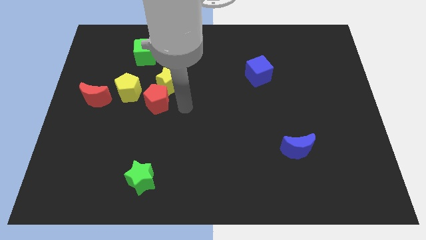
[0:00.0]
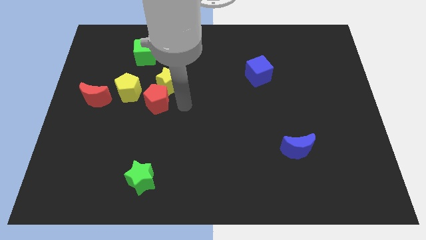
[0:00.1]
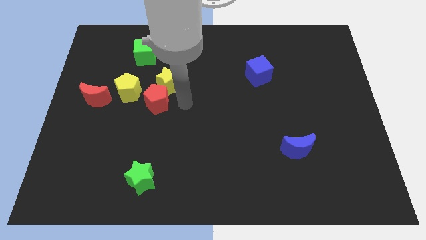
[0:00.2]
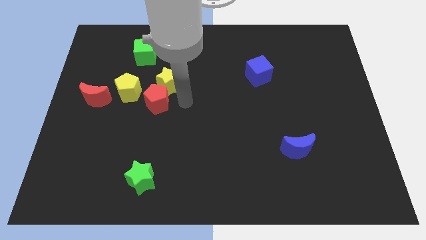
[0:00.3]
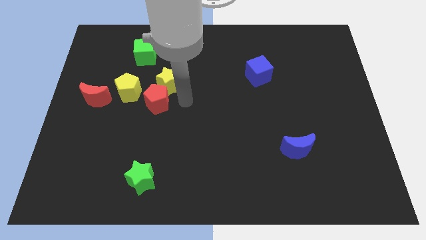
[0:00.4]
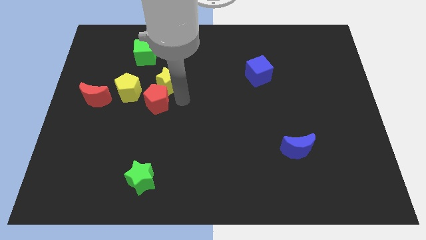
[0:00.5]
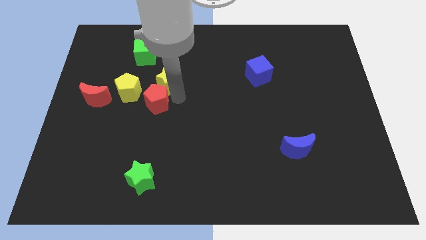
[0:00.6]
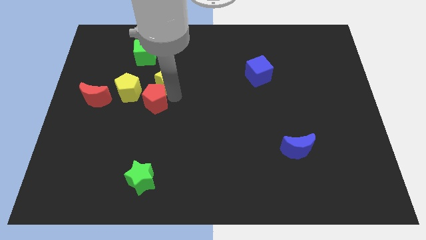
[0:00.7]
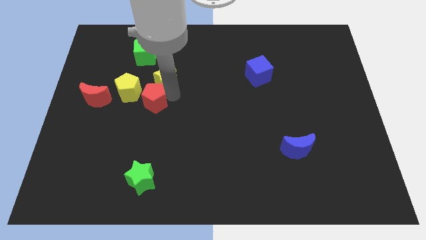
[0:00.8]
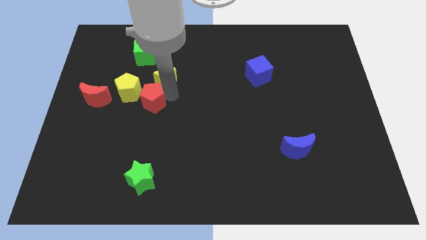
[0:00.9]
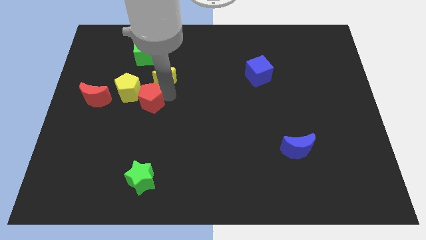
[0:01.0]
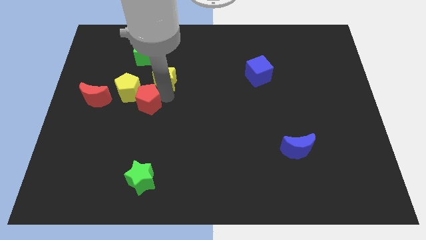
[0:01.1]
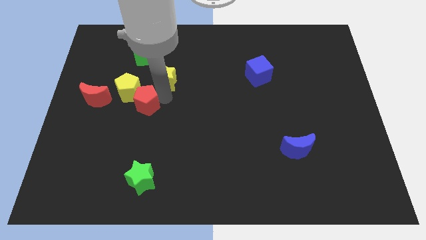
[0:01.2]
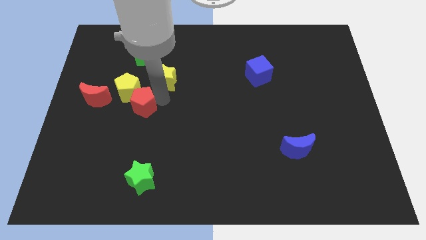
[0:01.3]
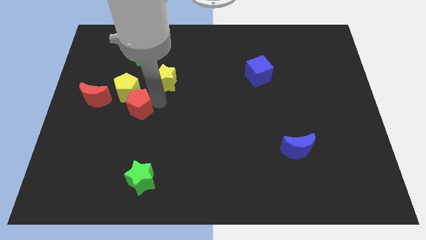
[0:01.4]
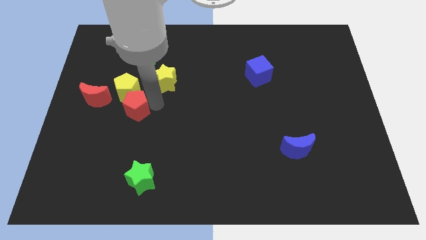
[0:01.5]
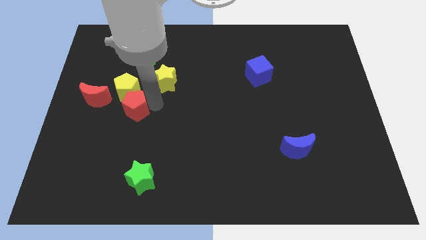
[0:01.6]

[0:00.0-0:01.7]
separate the red pentagon from the yellow star

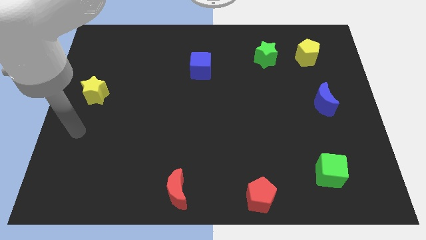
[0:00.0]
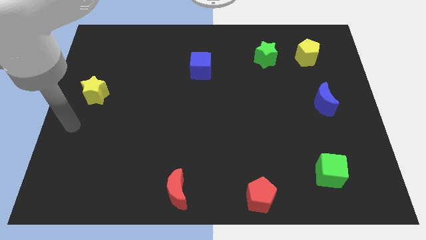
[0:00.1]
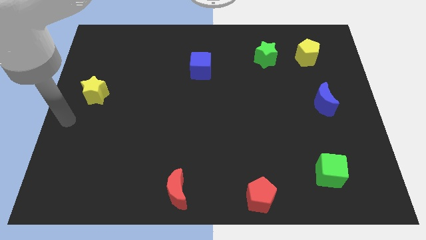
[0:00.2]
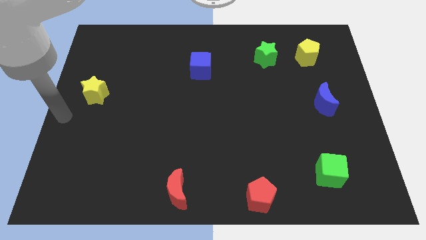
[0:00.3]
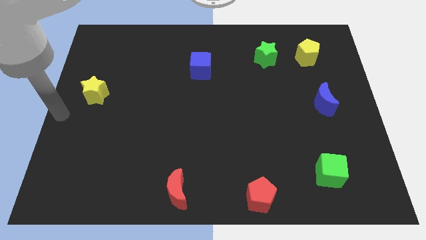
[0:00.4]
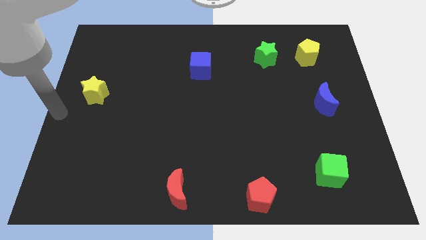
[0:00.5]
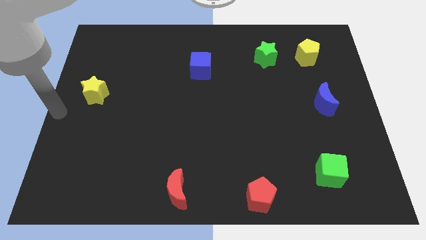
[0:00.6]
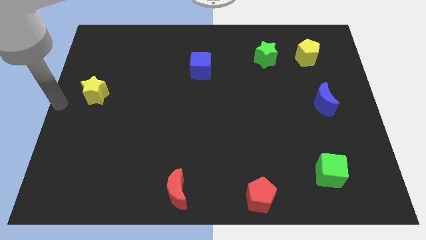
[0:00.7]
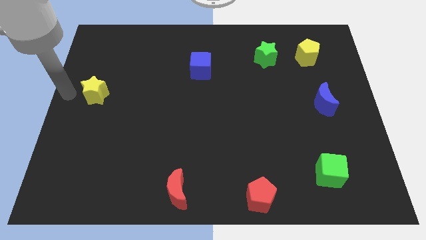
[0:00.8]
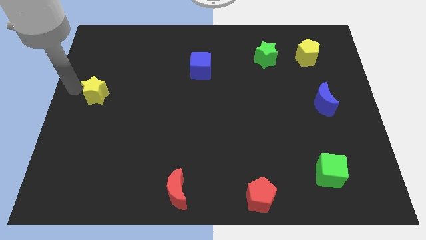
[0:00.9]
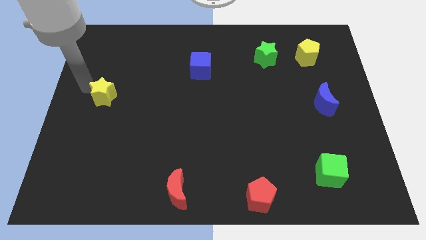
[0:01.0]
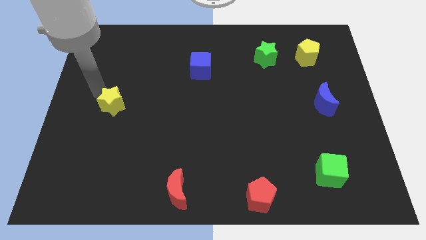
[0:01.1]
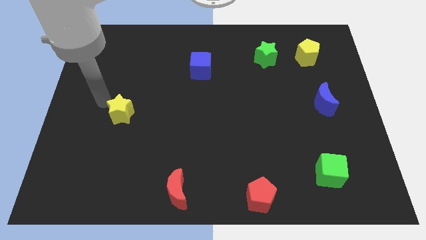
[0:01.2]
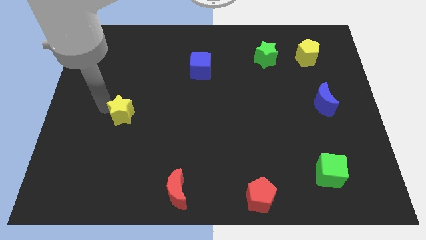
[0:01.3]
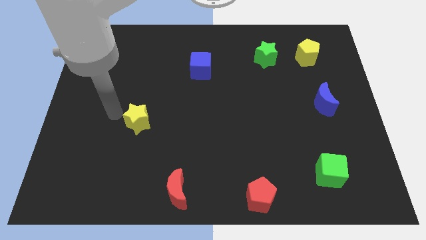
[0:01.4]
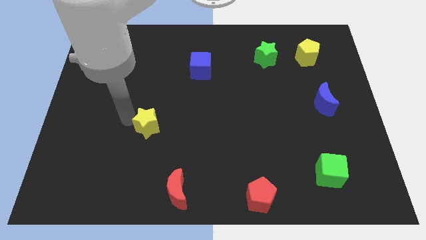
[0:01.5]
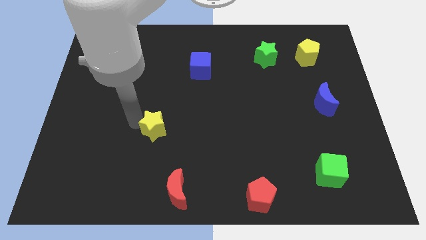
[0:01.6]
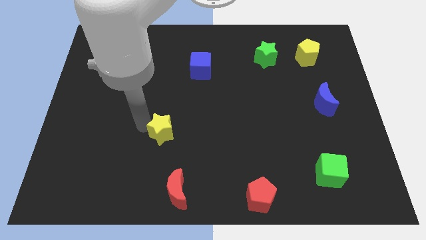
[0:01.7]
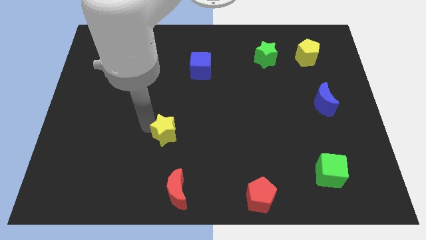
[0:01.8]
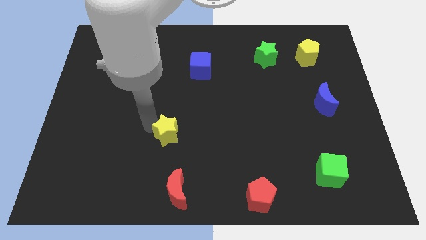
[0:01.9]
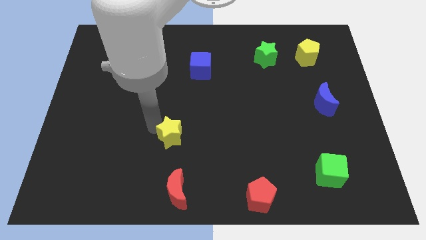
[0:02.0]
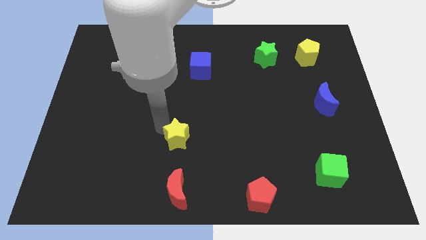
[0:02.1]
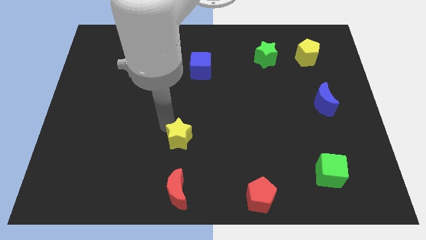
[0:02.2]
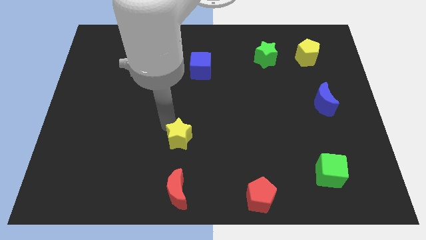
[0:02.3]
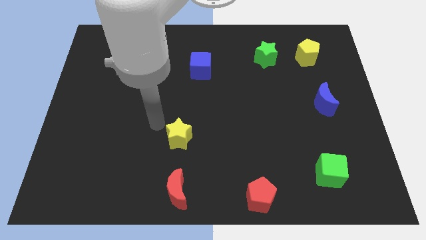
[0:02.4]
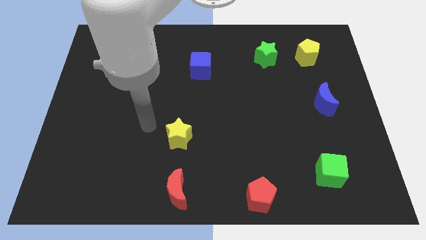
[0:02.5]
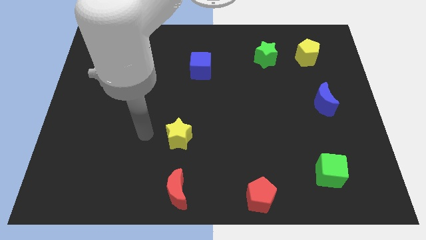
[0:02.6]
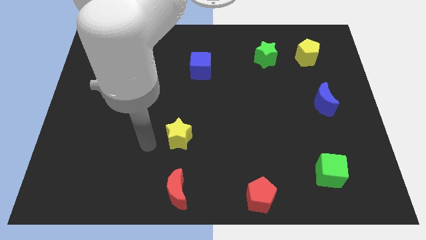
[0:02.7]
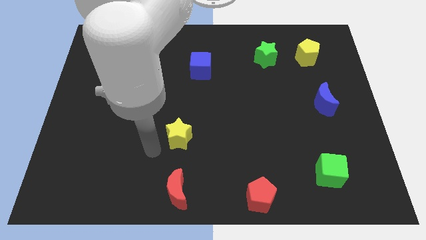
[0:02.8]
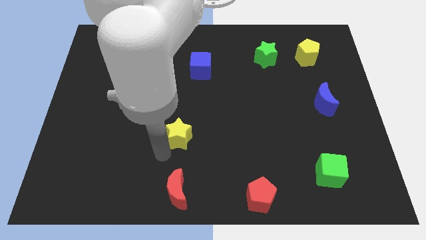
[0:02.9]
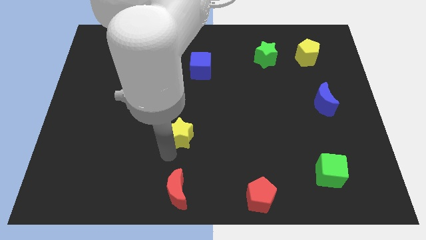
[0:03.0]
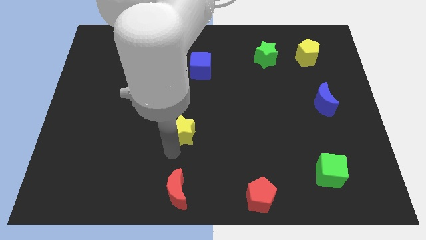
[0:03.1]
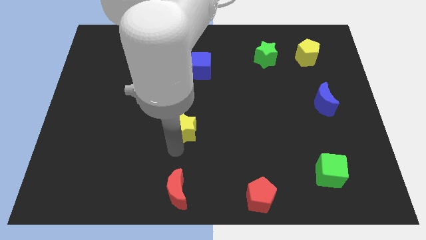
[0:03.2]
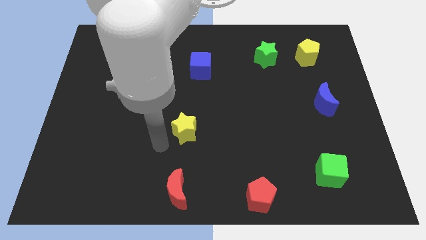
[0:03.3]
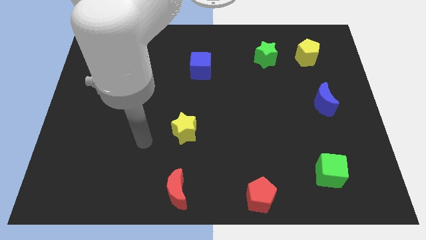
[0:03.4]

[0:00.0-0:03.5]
place the yellow star vertically above the red crescent

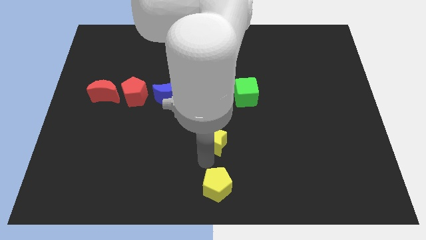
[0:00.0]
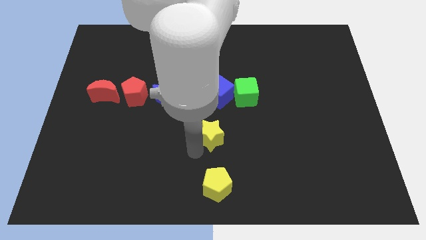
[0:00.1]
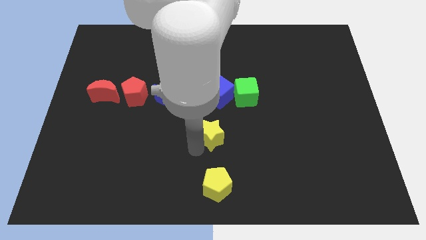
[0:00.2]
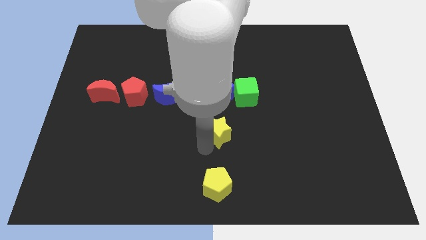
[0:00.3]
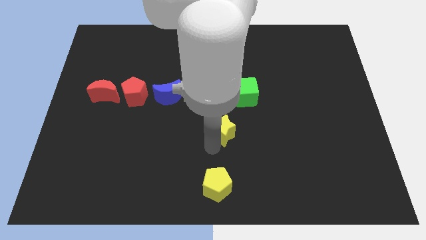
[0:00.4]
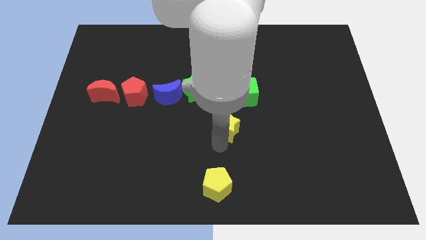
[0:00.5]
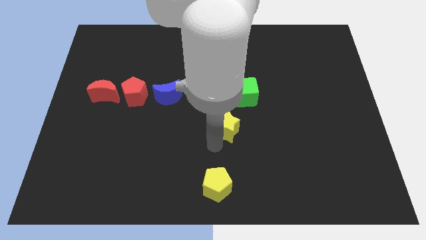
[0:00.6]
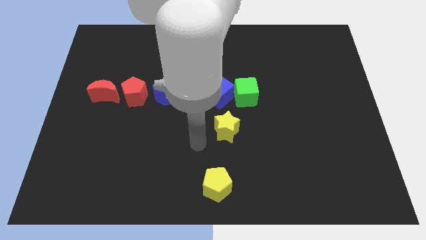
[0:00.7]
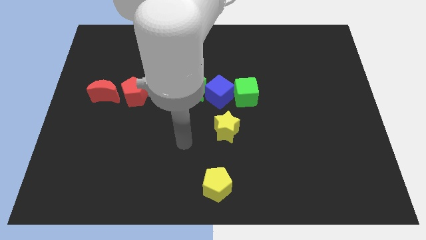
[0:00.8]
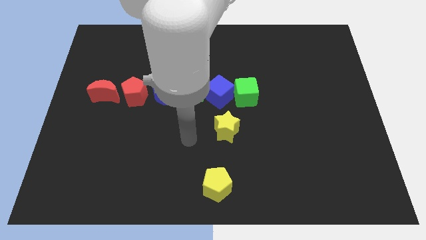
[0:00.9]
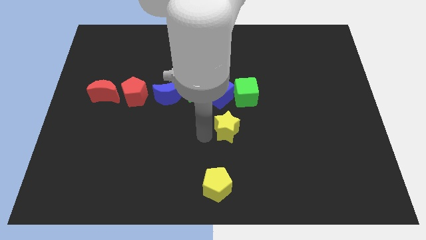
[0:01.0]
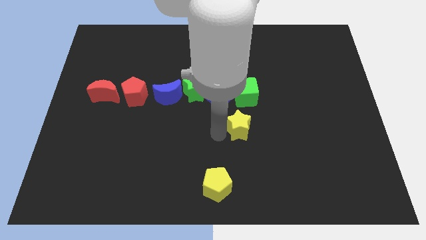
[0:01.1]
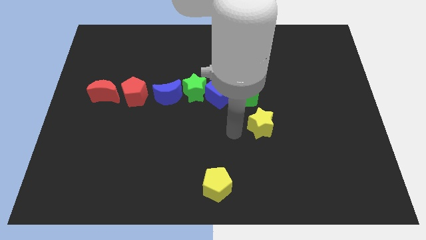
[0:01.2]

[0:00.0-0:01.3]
place yellow star below to green cube

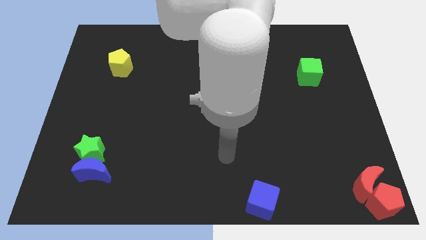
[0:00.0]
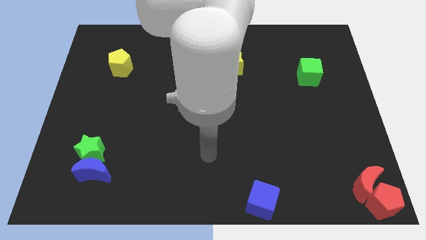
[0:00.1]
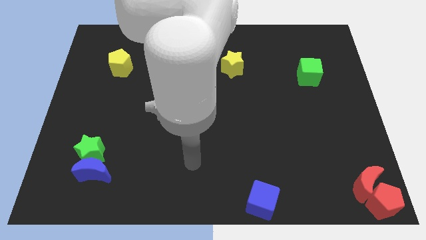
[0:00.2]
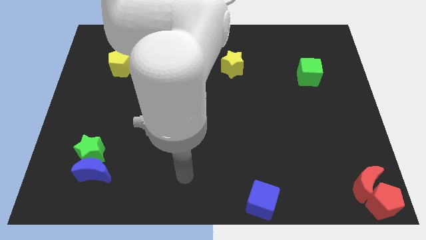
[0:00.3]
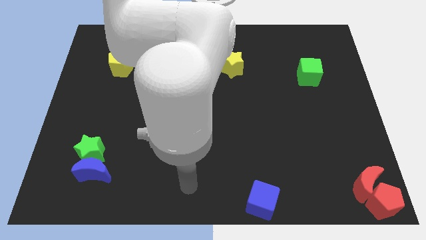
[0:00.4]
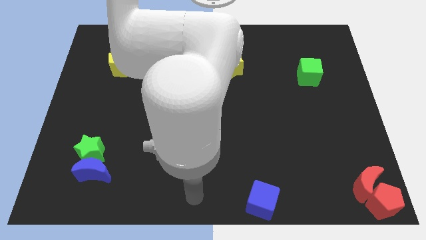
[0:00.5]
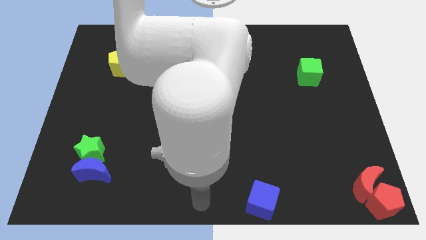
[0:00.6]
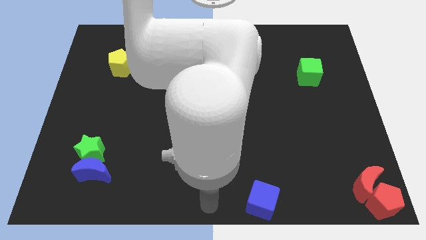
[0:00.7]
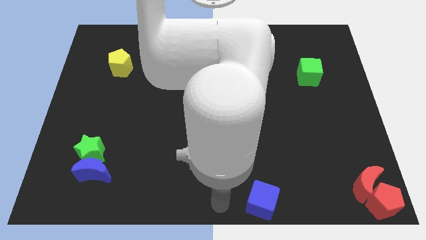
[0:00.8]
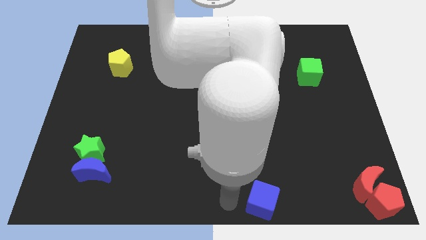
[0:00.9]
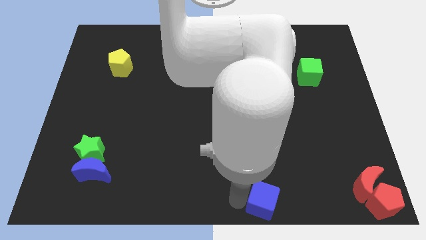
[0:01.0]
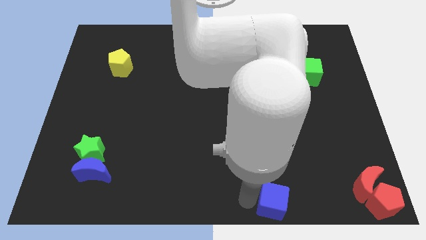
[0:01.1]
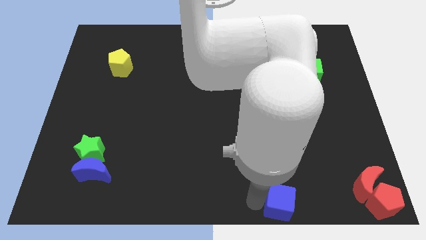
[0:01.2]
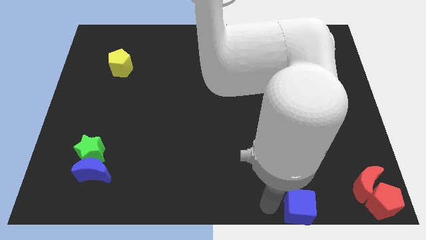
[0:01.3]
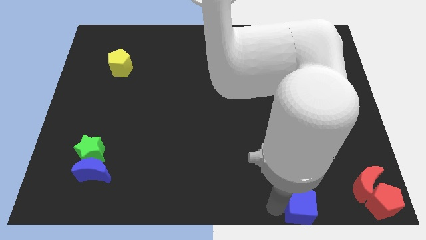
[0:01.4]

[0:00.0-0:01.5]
move the blue cube towards the red blocks

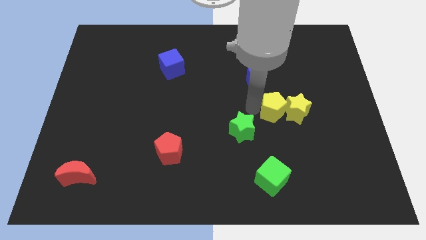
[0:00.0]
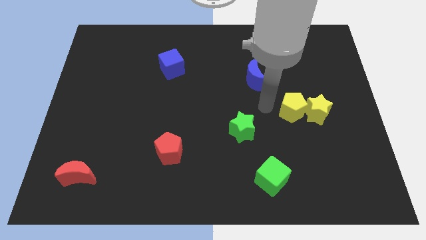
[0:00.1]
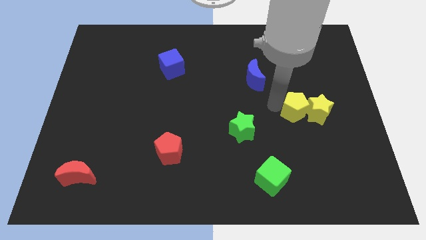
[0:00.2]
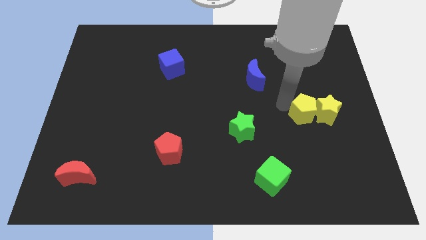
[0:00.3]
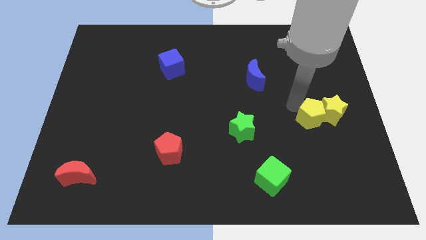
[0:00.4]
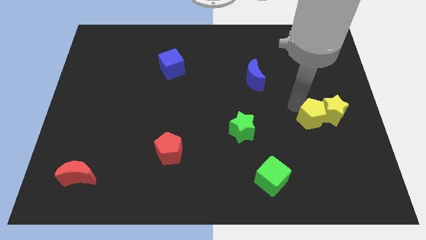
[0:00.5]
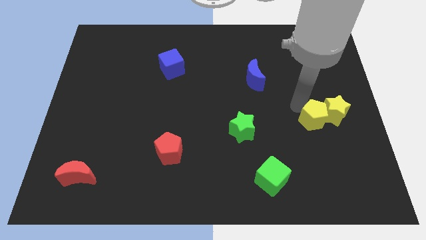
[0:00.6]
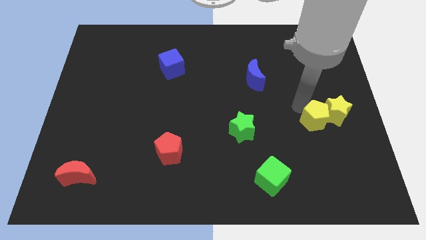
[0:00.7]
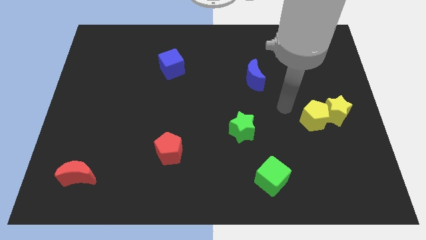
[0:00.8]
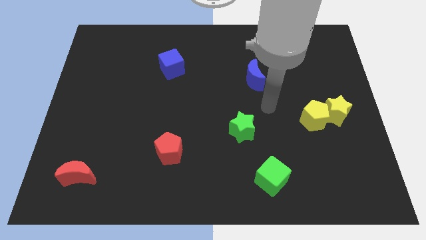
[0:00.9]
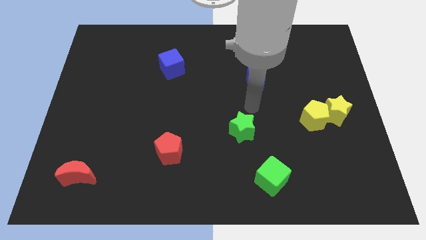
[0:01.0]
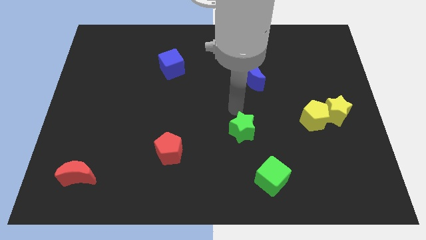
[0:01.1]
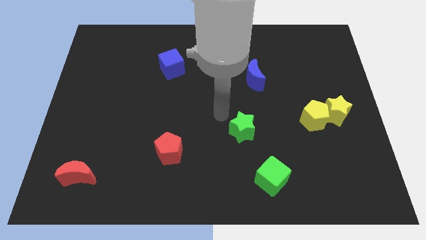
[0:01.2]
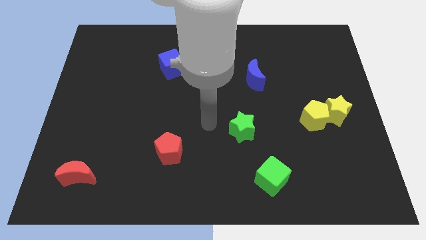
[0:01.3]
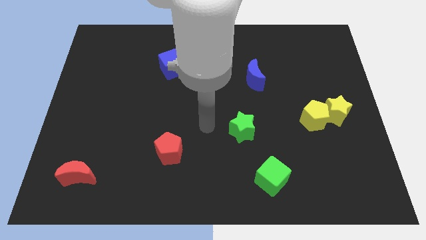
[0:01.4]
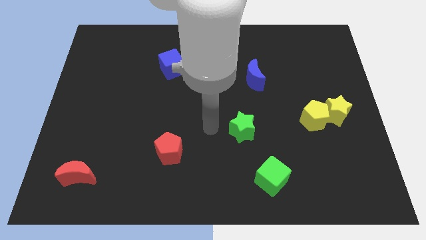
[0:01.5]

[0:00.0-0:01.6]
push yellow blocks to the center right
